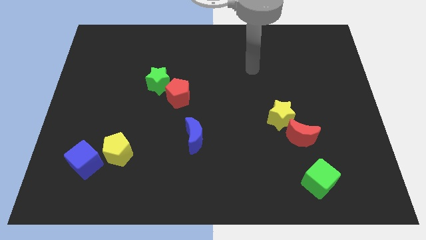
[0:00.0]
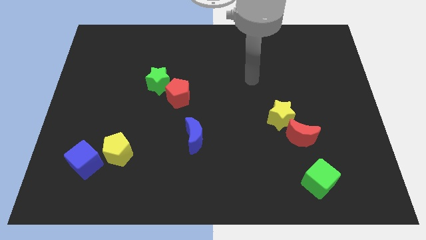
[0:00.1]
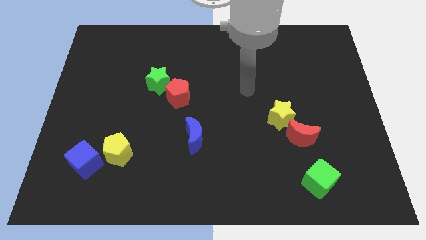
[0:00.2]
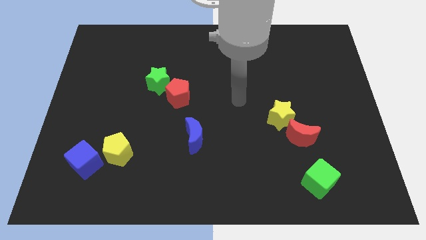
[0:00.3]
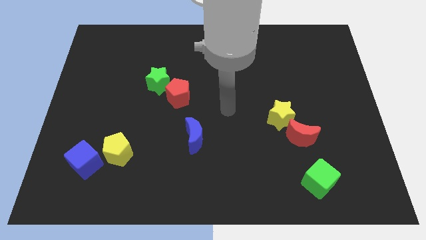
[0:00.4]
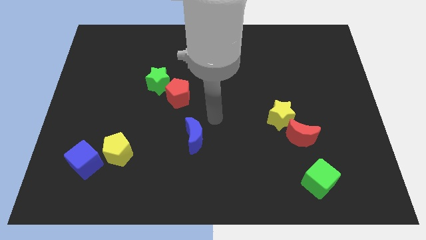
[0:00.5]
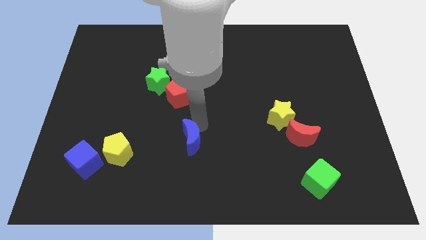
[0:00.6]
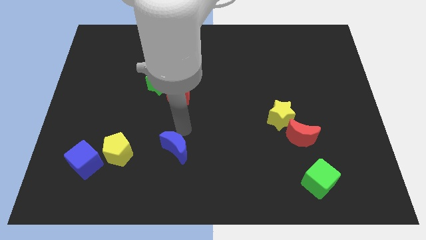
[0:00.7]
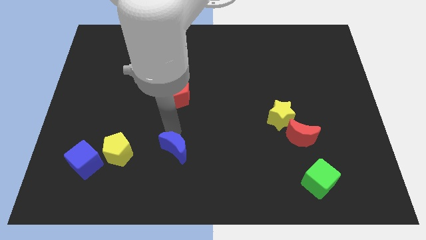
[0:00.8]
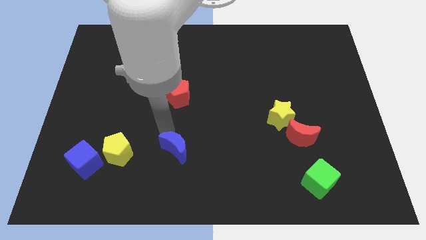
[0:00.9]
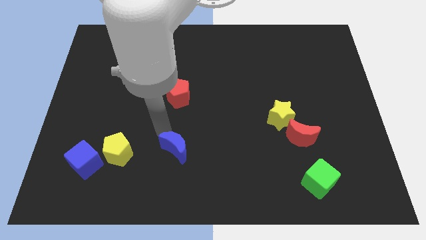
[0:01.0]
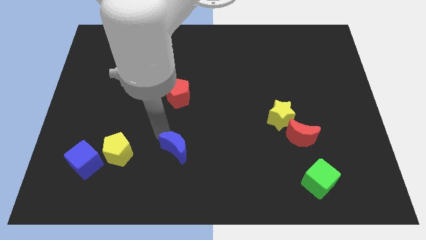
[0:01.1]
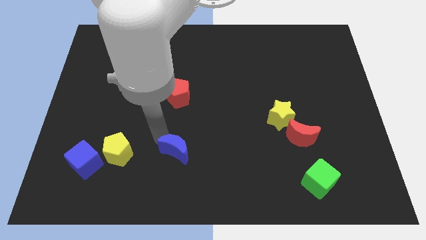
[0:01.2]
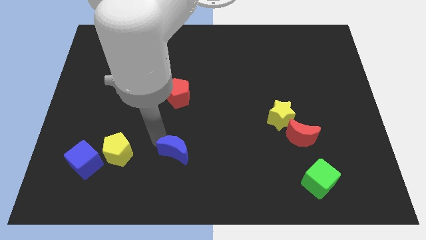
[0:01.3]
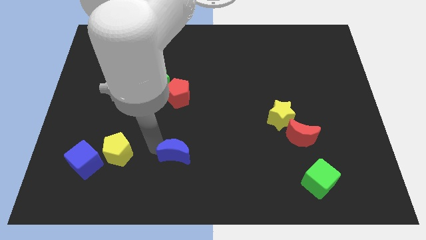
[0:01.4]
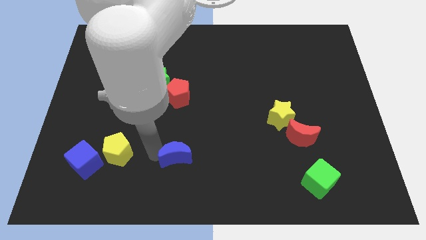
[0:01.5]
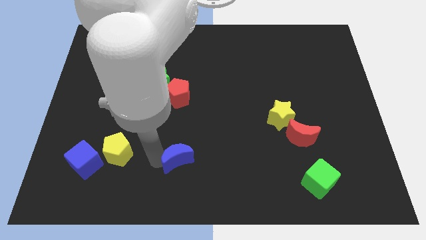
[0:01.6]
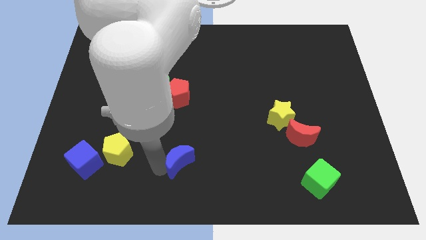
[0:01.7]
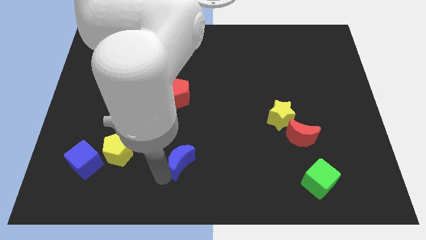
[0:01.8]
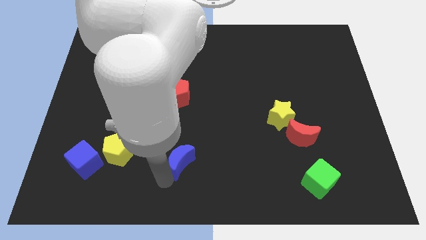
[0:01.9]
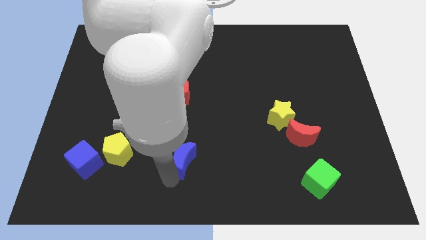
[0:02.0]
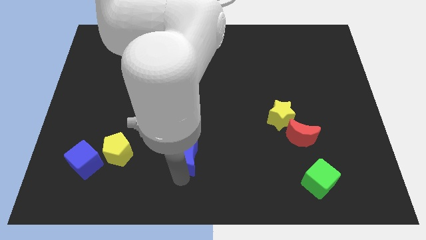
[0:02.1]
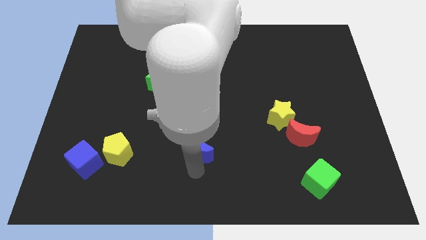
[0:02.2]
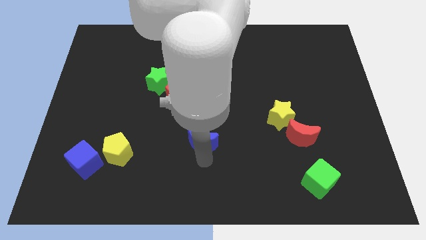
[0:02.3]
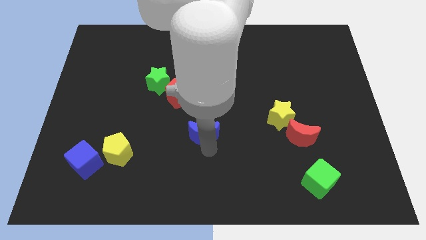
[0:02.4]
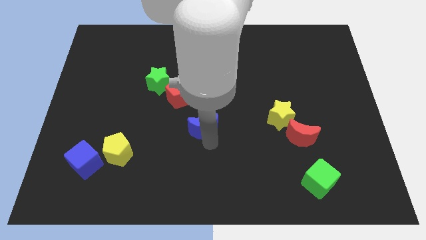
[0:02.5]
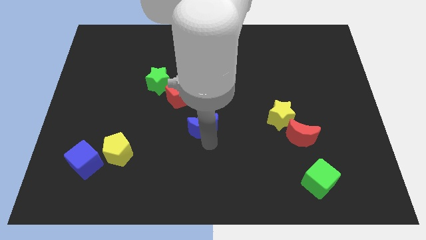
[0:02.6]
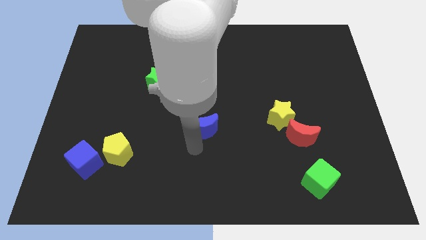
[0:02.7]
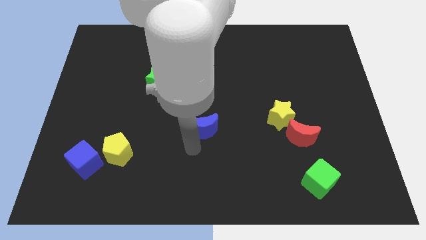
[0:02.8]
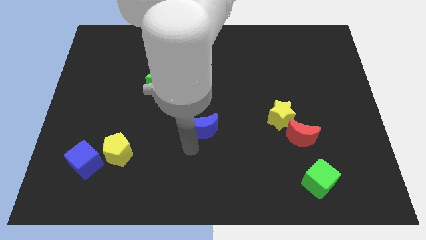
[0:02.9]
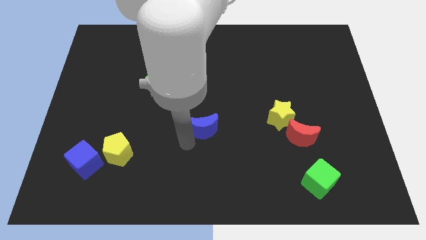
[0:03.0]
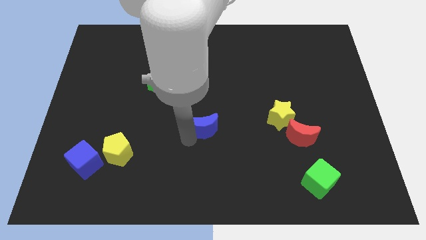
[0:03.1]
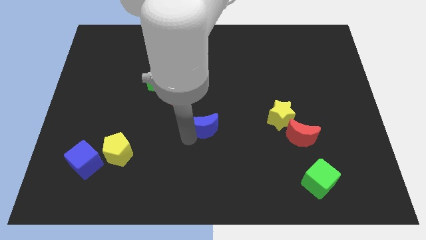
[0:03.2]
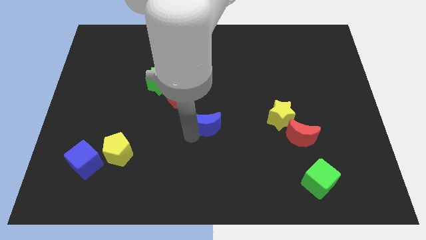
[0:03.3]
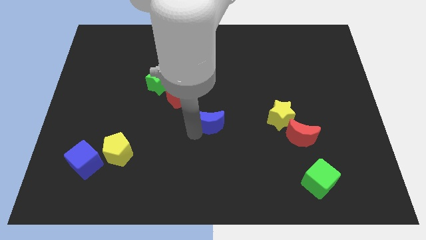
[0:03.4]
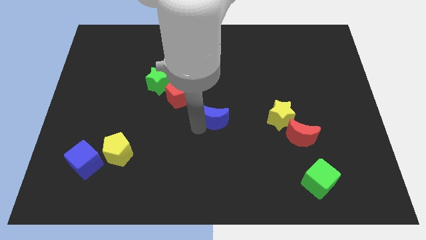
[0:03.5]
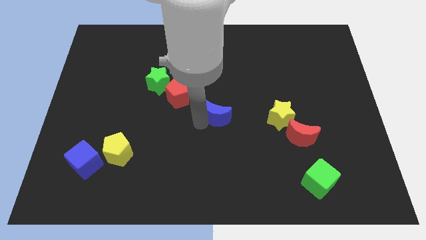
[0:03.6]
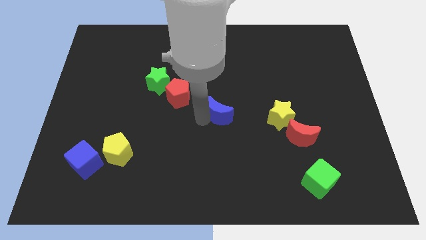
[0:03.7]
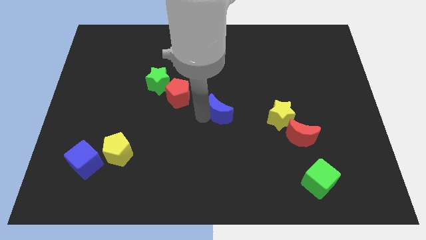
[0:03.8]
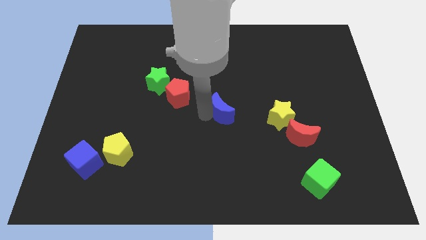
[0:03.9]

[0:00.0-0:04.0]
place the blue moon to the left of the yellow star

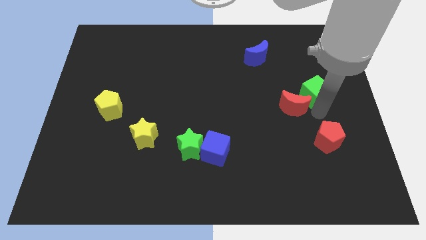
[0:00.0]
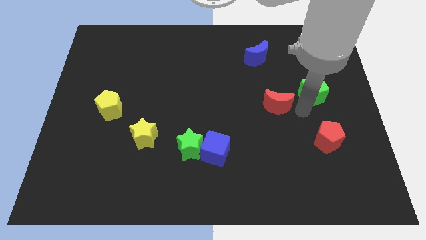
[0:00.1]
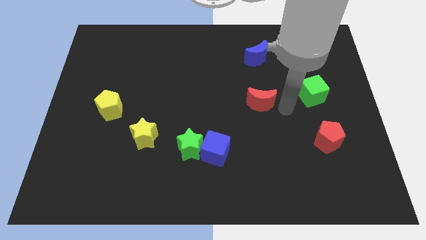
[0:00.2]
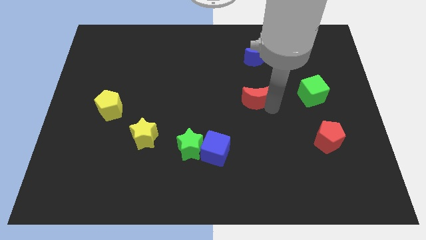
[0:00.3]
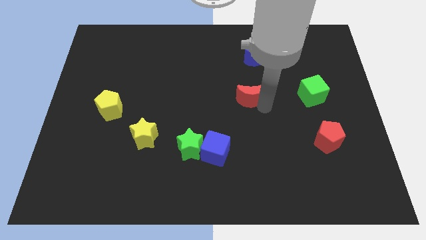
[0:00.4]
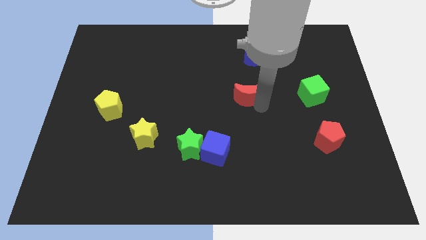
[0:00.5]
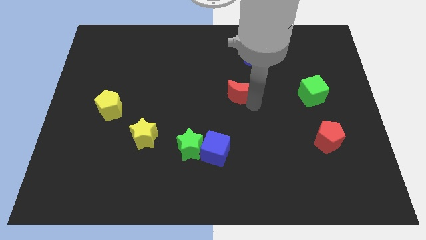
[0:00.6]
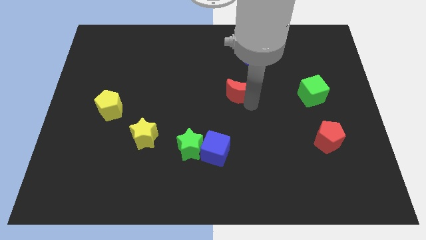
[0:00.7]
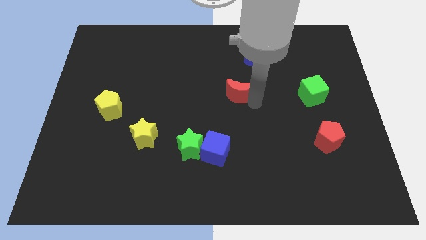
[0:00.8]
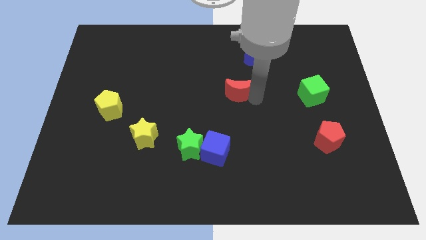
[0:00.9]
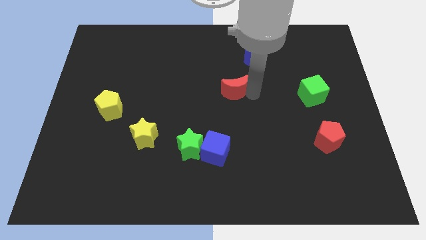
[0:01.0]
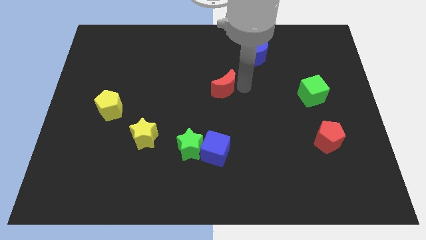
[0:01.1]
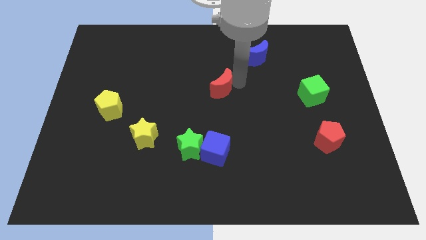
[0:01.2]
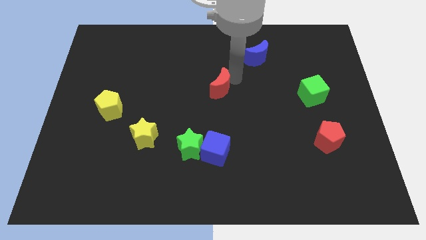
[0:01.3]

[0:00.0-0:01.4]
place the red moon diagonal to the blue moon

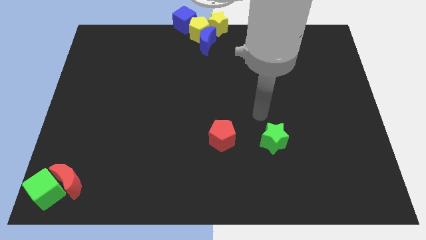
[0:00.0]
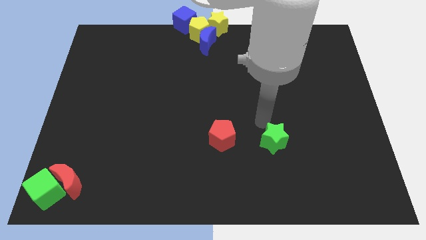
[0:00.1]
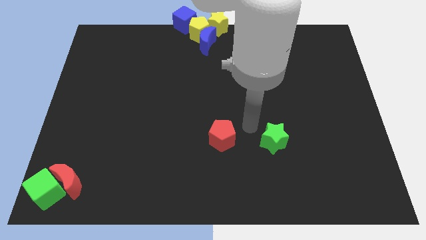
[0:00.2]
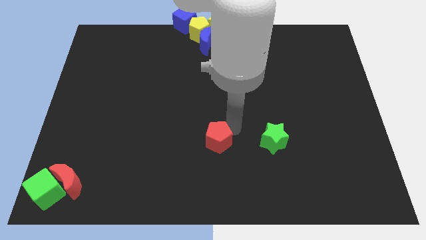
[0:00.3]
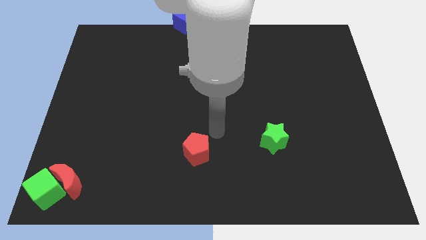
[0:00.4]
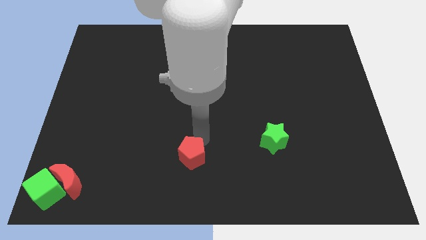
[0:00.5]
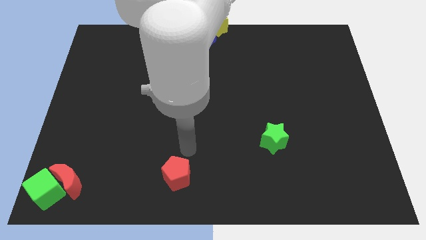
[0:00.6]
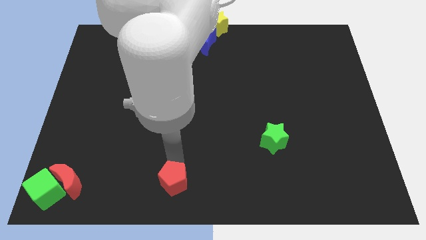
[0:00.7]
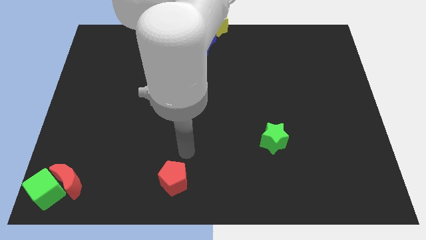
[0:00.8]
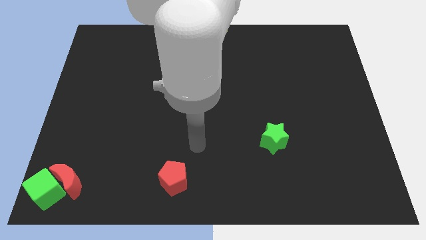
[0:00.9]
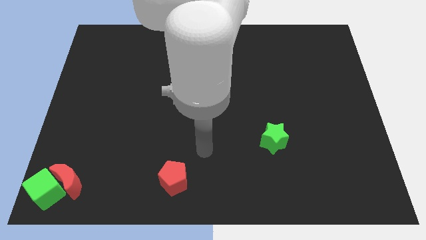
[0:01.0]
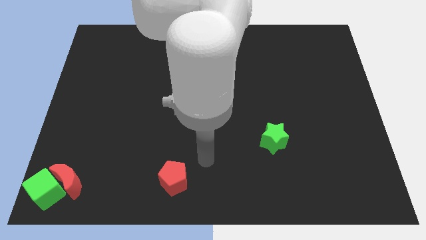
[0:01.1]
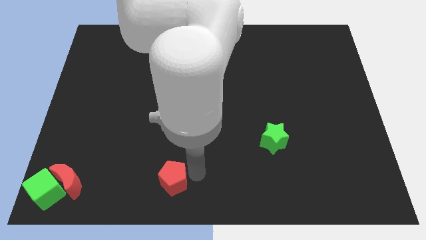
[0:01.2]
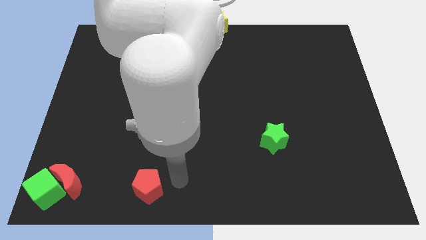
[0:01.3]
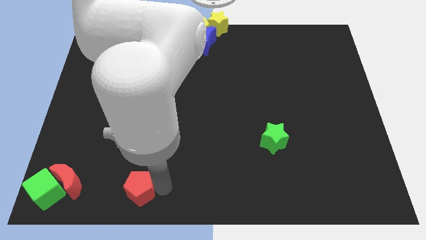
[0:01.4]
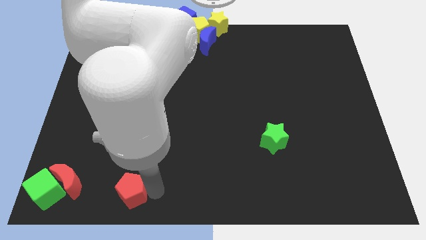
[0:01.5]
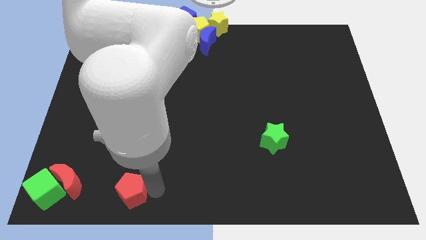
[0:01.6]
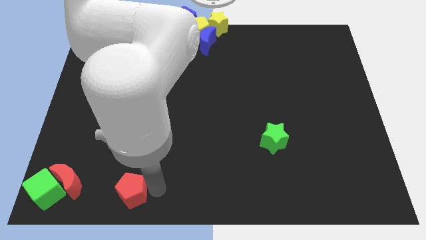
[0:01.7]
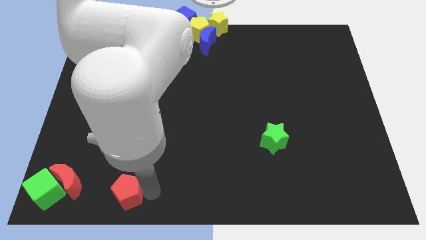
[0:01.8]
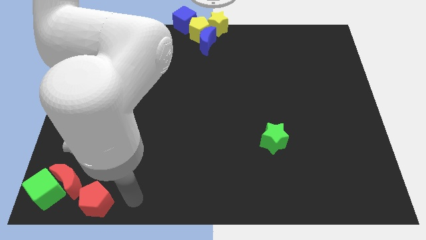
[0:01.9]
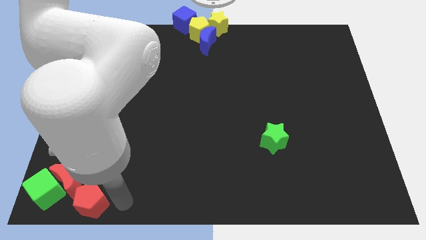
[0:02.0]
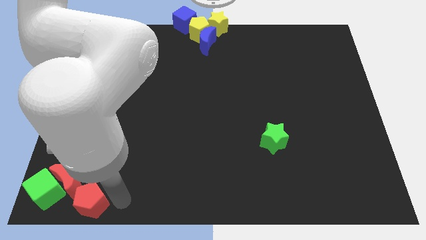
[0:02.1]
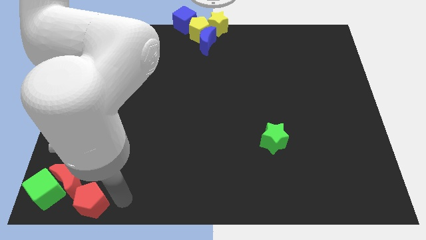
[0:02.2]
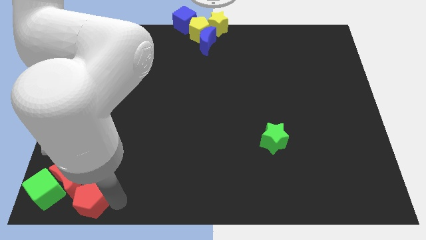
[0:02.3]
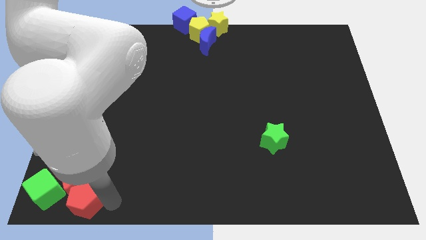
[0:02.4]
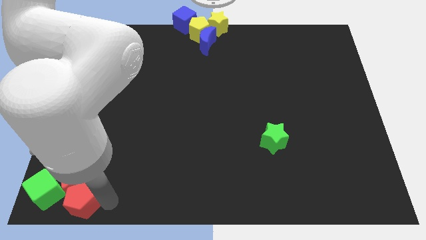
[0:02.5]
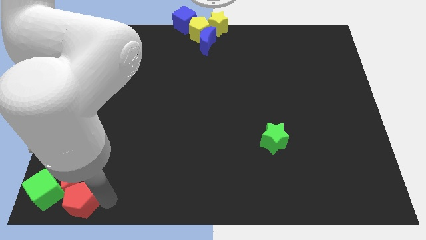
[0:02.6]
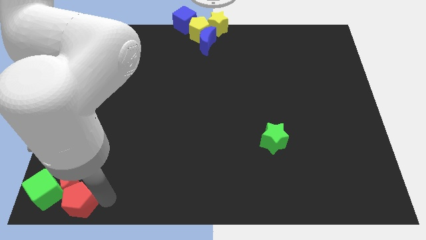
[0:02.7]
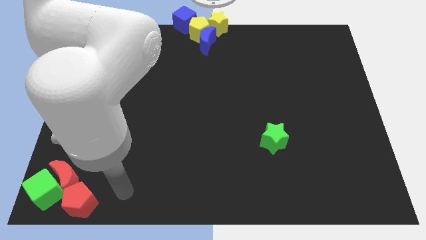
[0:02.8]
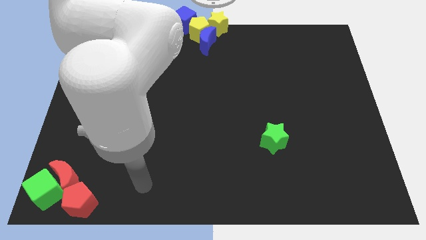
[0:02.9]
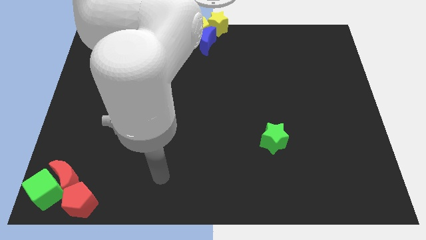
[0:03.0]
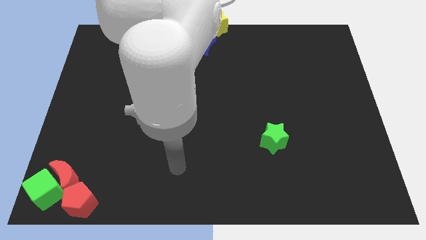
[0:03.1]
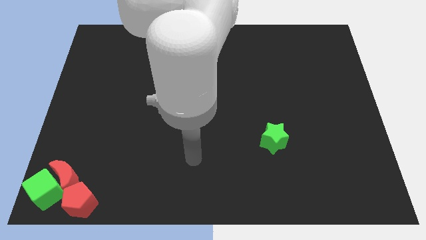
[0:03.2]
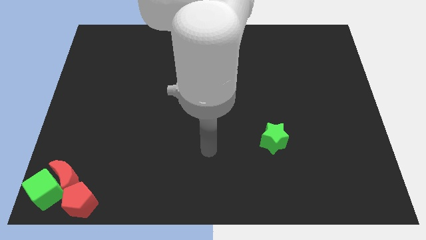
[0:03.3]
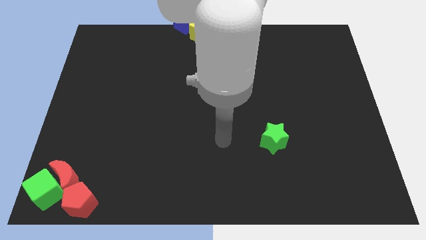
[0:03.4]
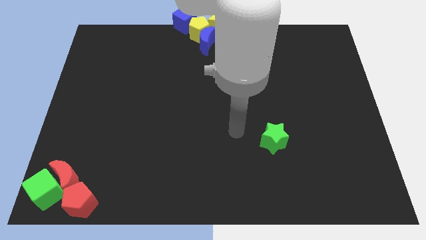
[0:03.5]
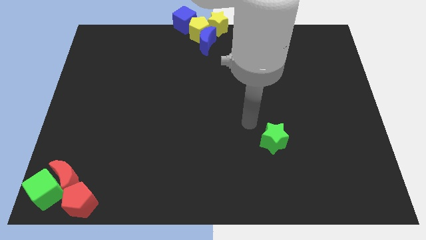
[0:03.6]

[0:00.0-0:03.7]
move red pentagon into the green cube and red crescent
